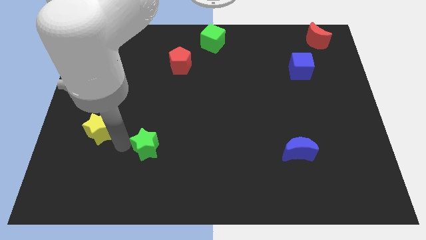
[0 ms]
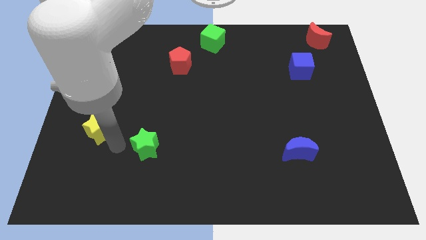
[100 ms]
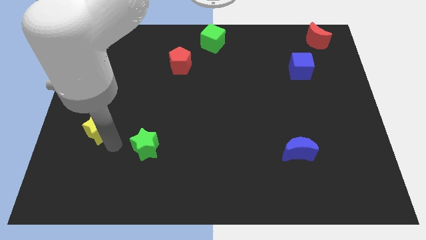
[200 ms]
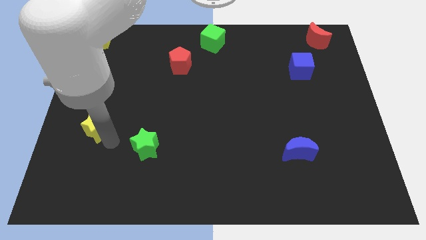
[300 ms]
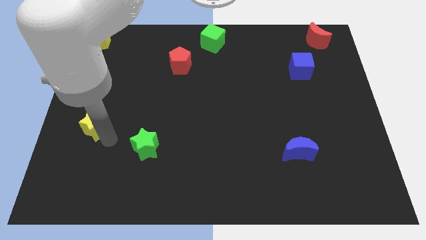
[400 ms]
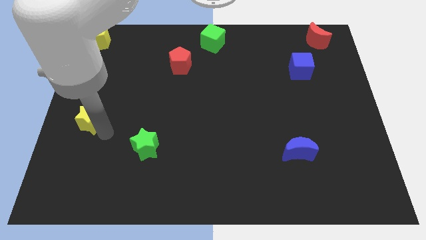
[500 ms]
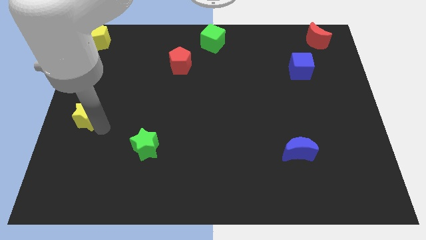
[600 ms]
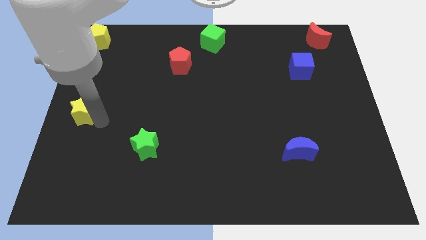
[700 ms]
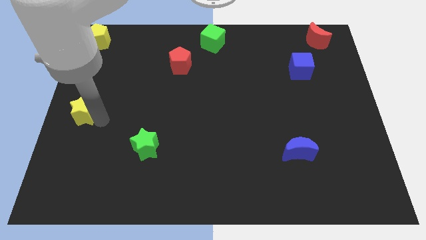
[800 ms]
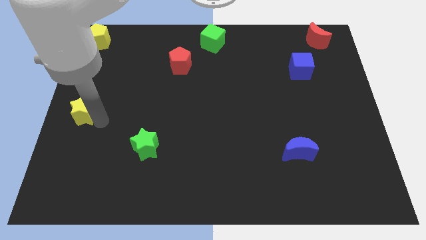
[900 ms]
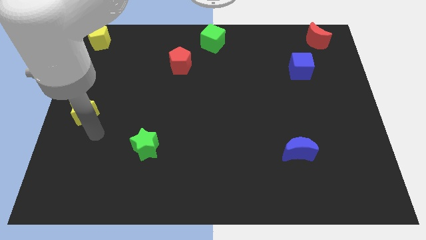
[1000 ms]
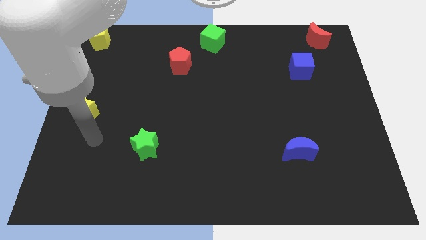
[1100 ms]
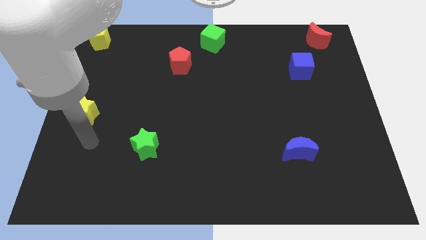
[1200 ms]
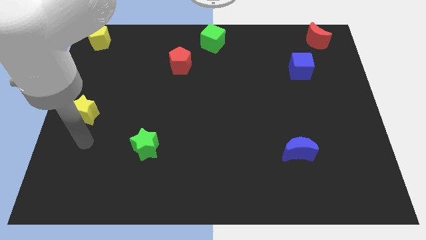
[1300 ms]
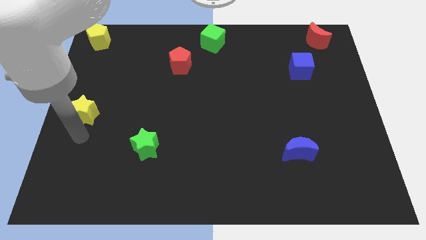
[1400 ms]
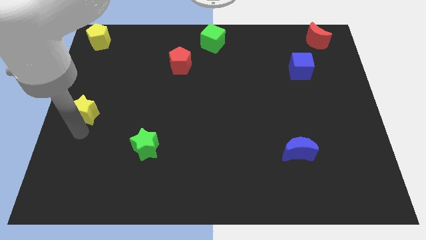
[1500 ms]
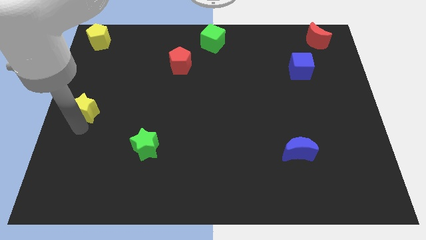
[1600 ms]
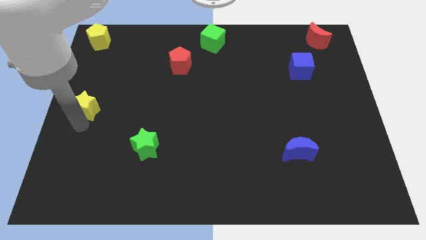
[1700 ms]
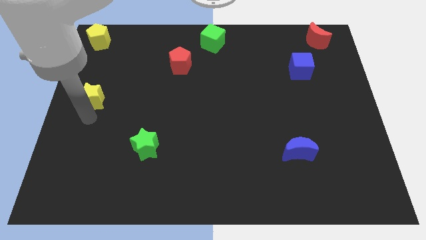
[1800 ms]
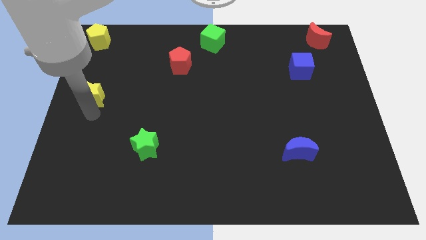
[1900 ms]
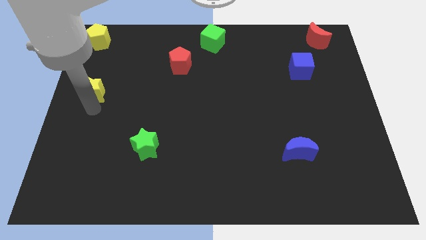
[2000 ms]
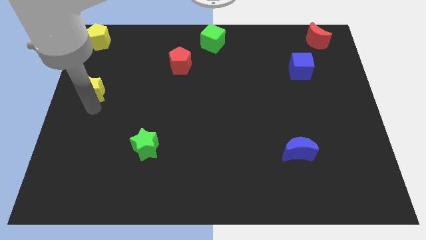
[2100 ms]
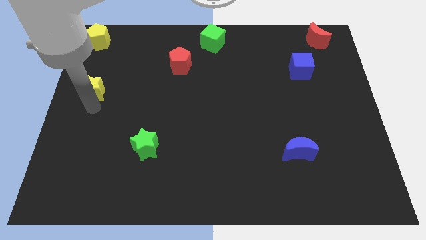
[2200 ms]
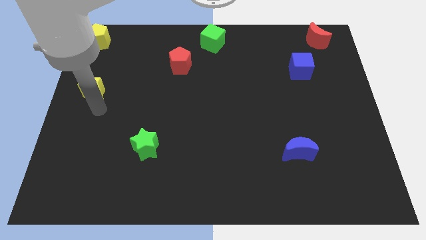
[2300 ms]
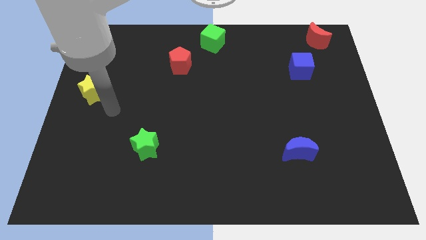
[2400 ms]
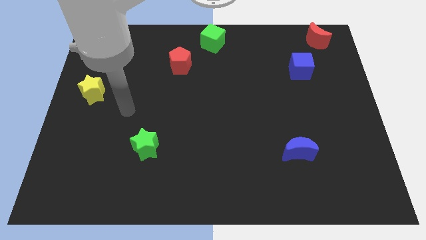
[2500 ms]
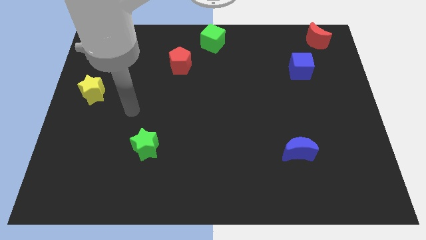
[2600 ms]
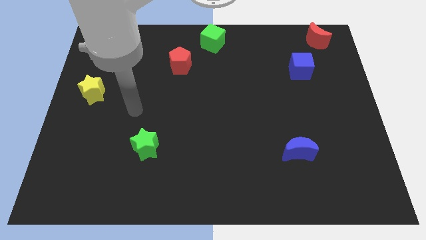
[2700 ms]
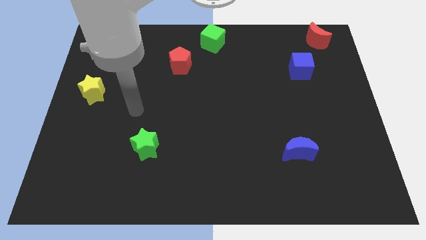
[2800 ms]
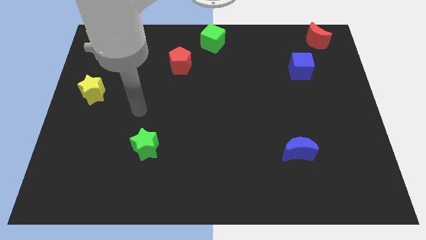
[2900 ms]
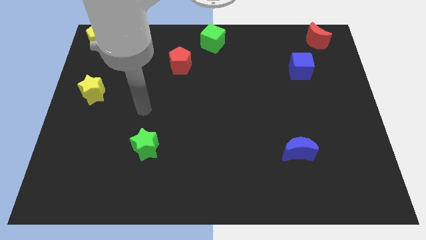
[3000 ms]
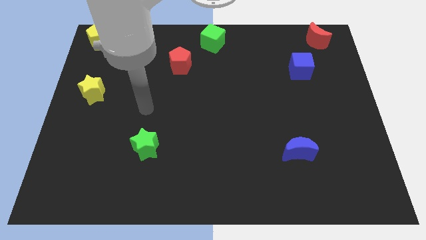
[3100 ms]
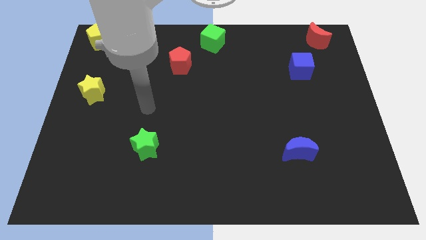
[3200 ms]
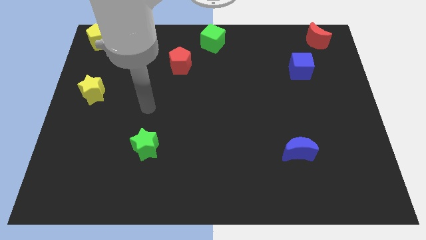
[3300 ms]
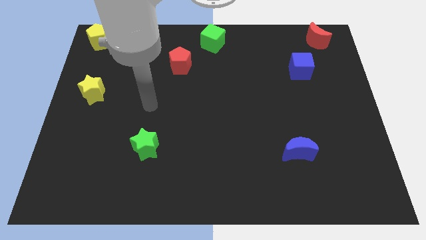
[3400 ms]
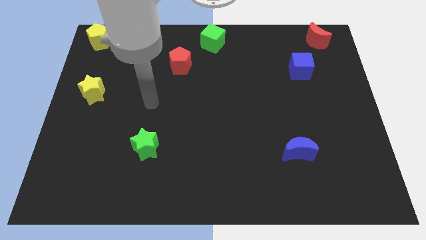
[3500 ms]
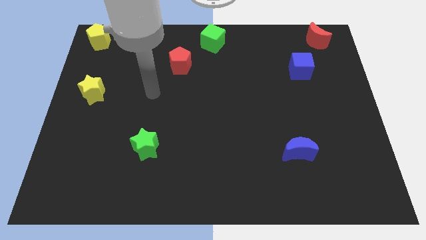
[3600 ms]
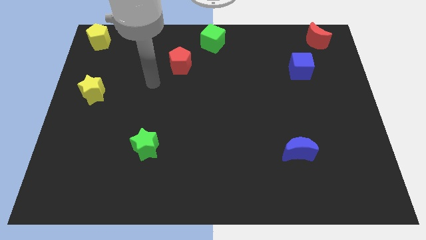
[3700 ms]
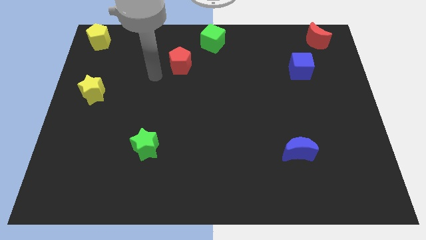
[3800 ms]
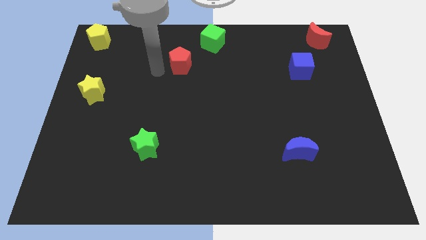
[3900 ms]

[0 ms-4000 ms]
move the yellow star below the yellow pentagon

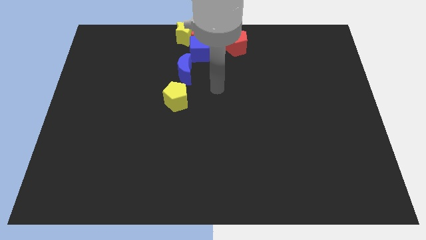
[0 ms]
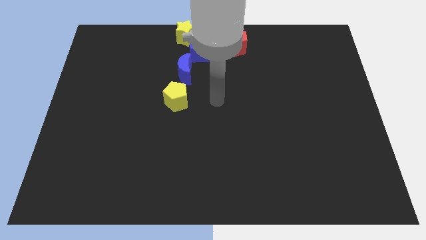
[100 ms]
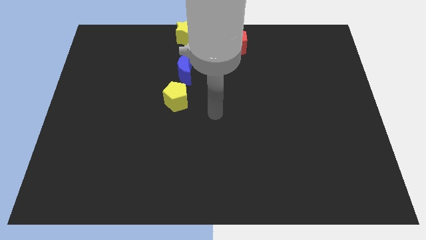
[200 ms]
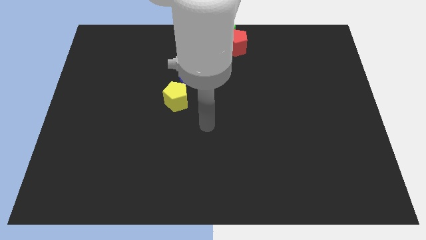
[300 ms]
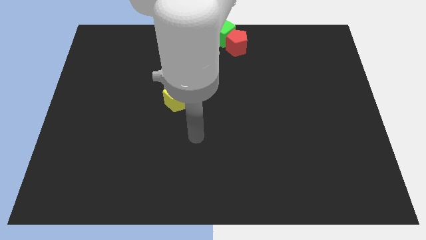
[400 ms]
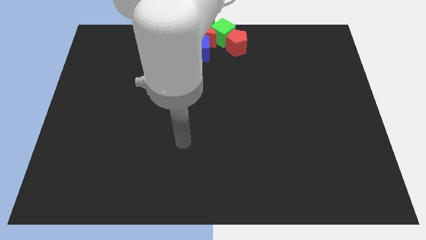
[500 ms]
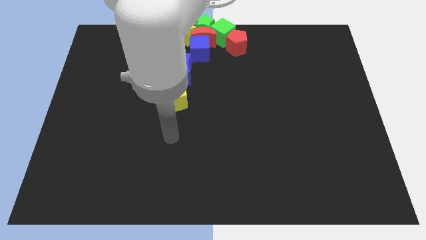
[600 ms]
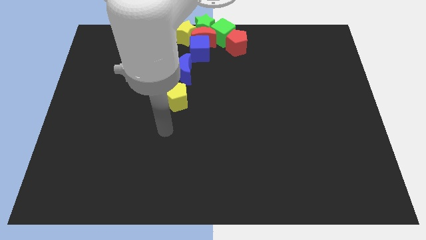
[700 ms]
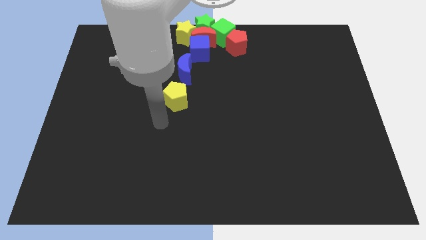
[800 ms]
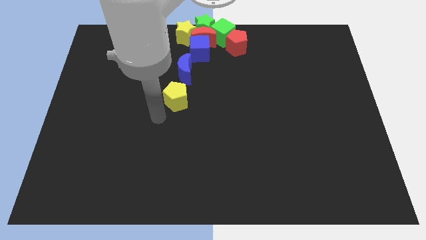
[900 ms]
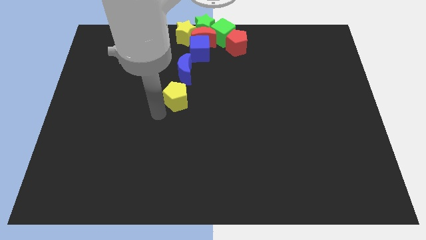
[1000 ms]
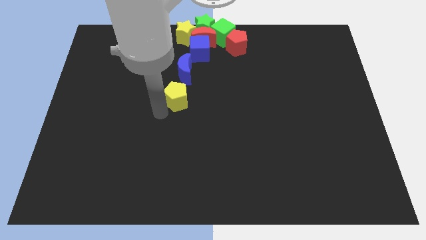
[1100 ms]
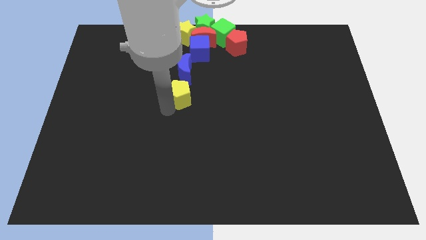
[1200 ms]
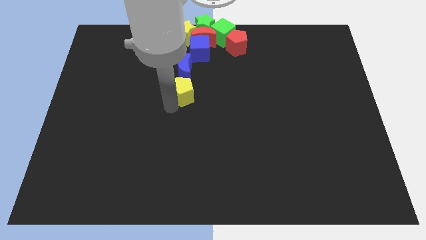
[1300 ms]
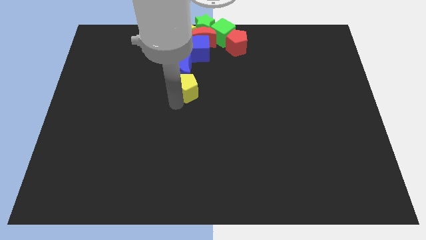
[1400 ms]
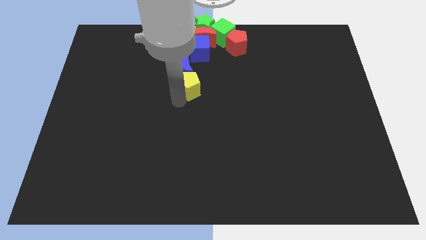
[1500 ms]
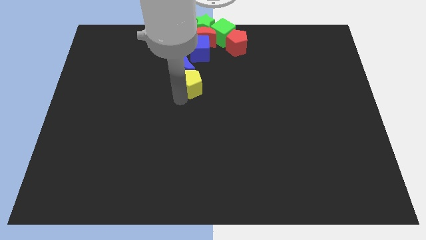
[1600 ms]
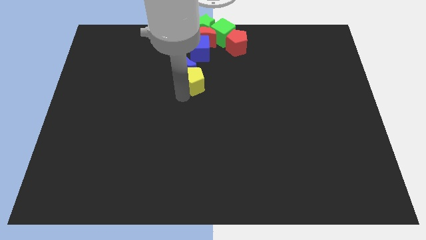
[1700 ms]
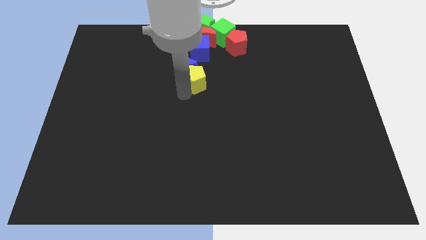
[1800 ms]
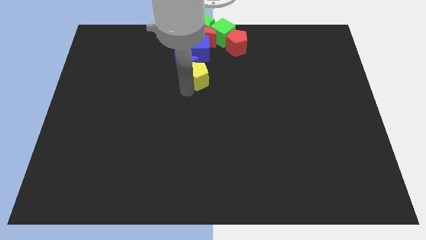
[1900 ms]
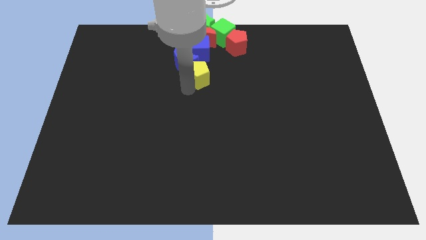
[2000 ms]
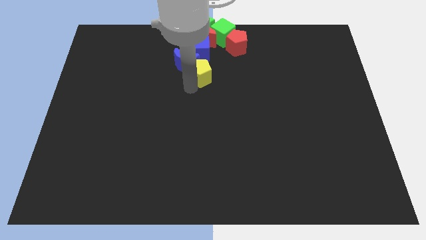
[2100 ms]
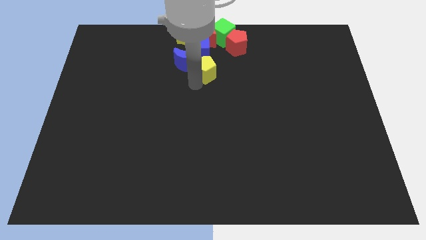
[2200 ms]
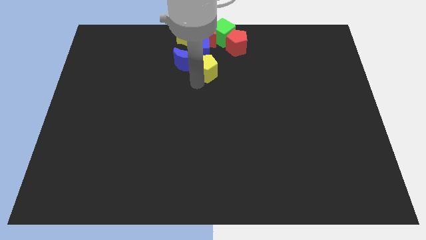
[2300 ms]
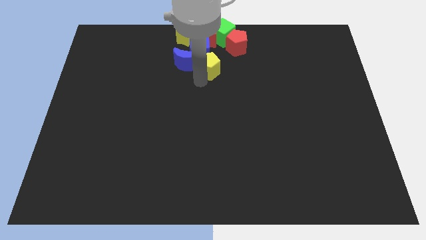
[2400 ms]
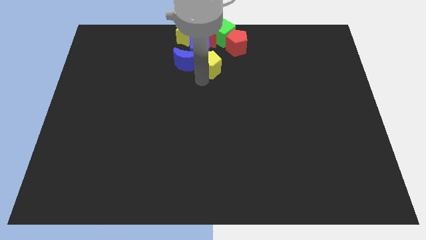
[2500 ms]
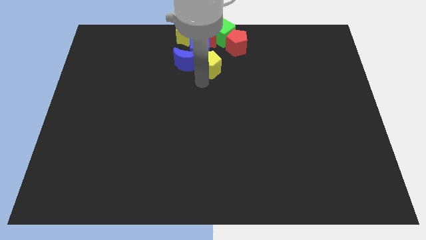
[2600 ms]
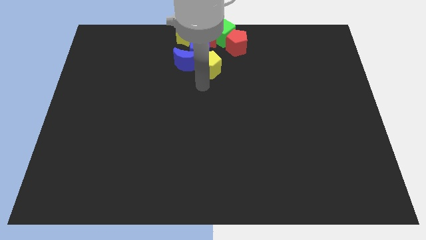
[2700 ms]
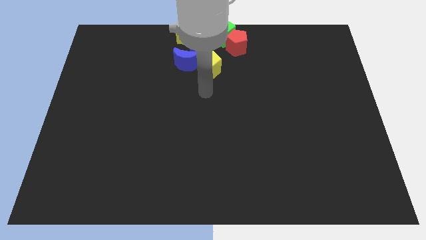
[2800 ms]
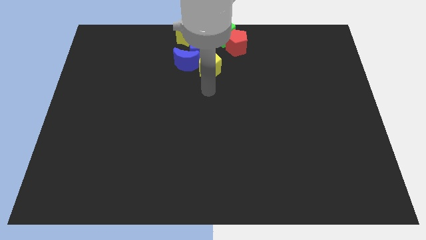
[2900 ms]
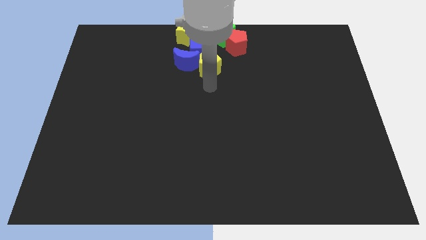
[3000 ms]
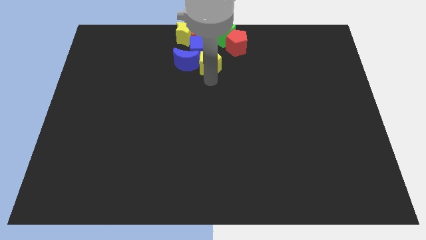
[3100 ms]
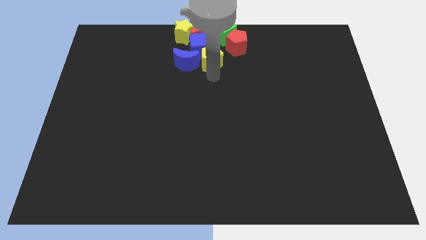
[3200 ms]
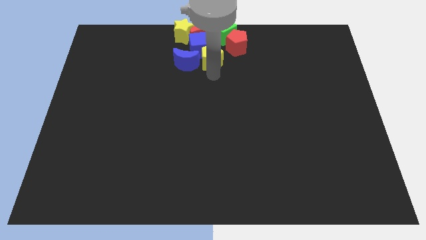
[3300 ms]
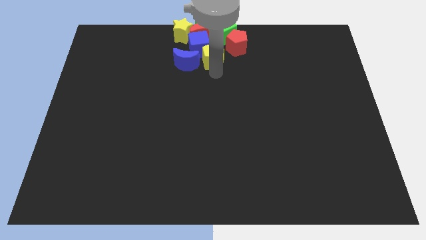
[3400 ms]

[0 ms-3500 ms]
push the yellow pentagon into the group of blocks

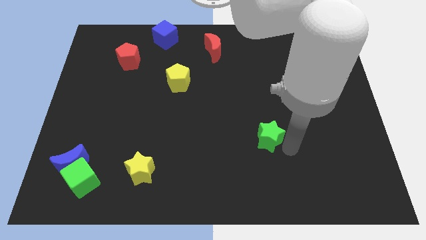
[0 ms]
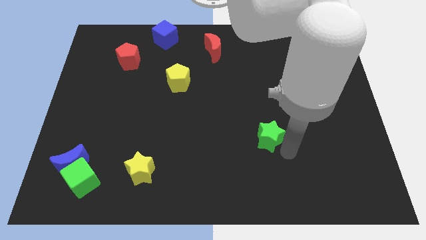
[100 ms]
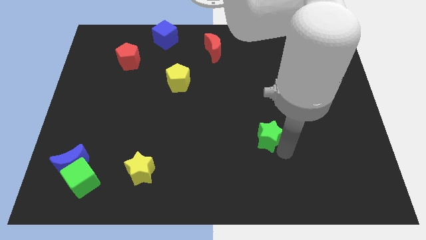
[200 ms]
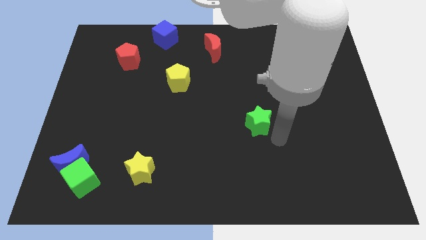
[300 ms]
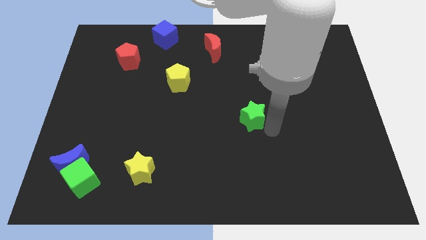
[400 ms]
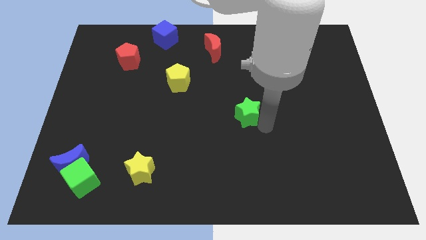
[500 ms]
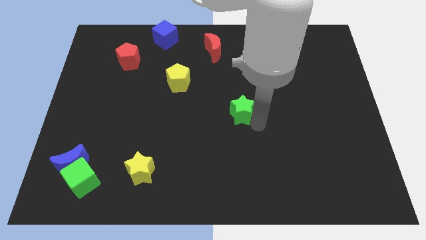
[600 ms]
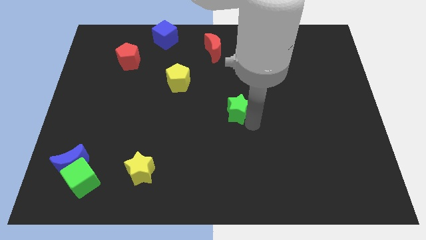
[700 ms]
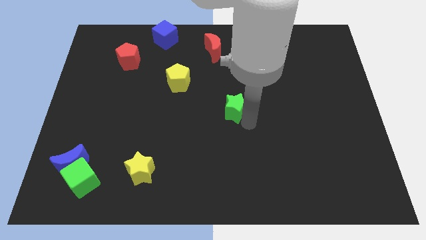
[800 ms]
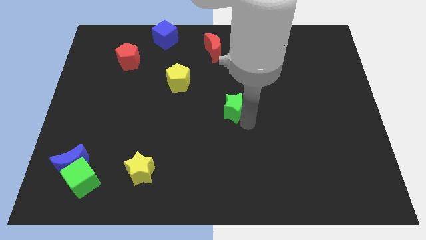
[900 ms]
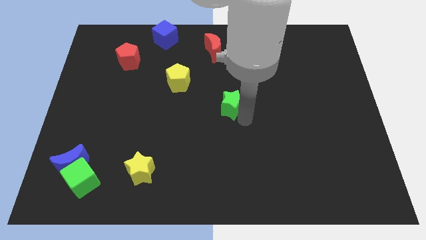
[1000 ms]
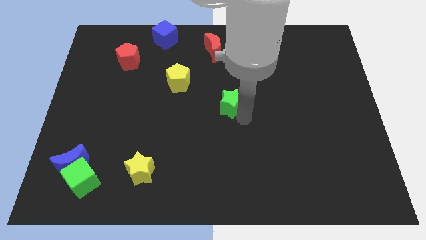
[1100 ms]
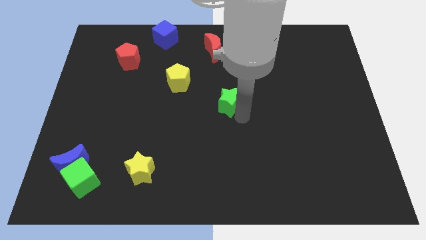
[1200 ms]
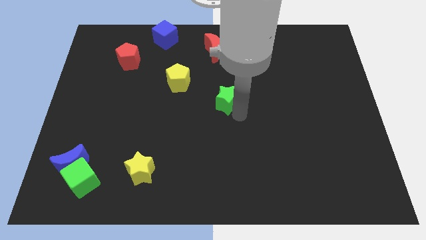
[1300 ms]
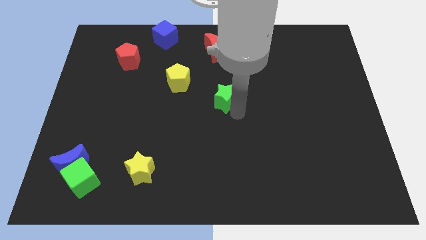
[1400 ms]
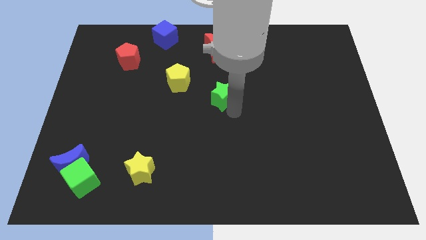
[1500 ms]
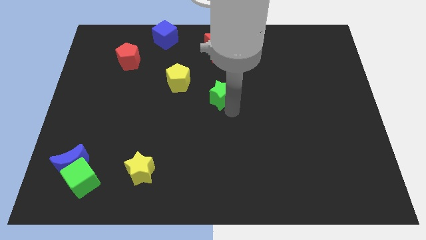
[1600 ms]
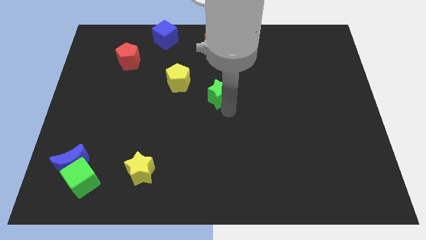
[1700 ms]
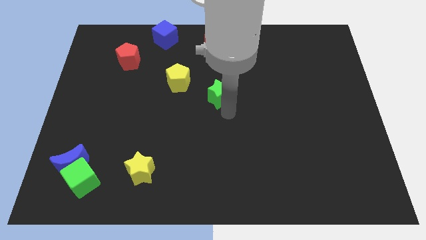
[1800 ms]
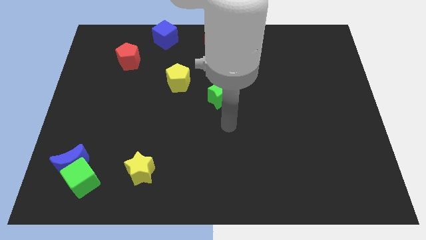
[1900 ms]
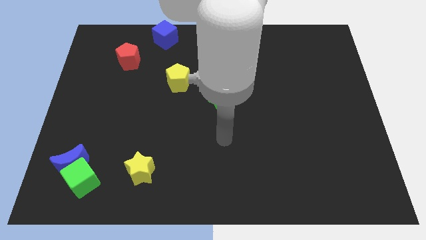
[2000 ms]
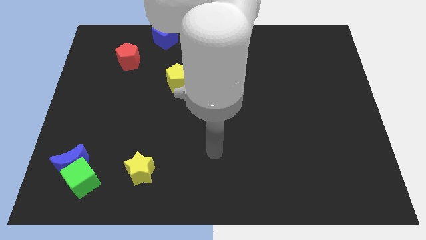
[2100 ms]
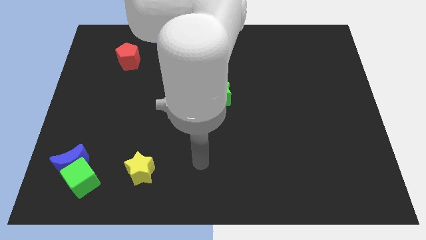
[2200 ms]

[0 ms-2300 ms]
push the star to the bottom side of red crescent
